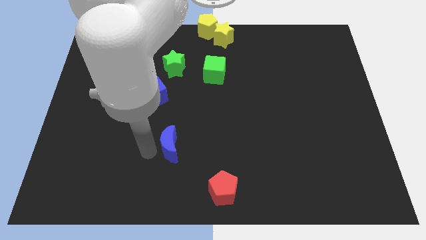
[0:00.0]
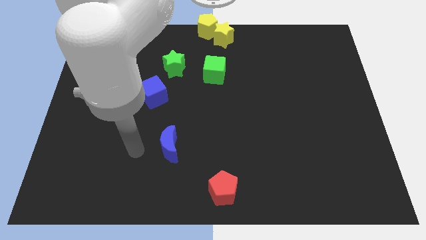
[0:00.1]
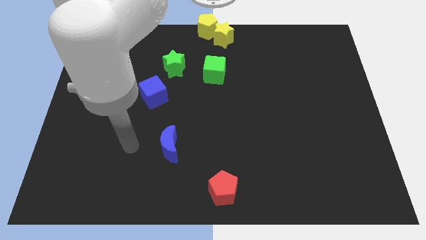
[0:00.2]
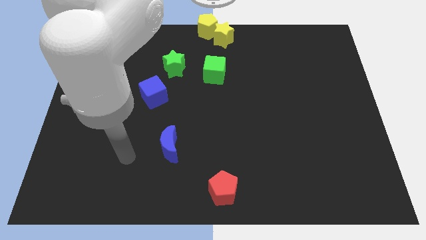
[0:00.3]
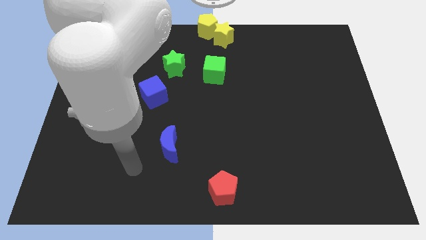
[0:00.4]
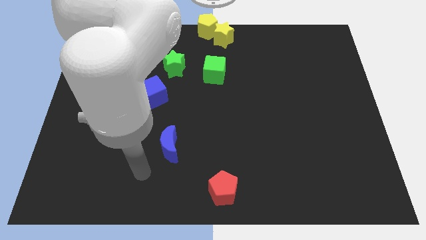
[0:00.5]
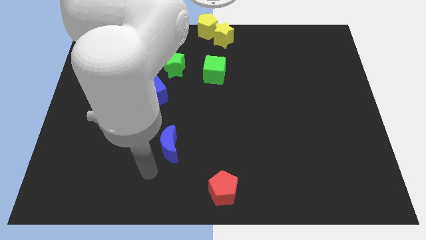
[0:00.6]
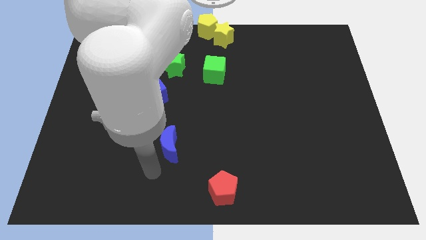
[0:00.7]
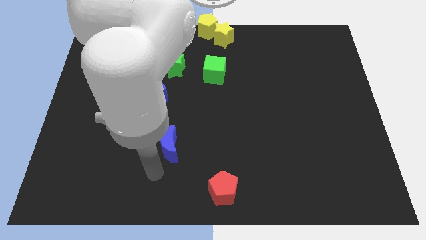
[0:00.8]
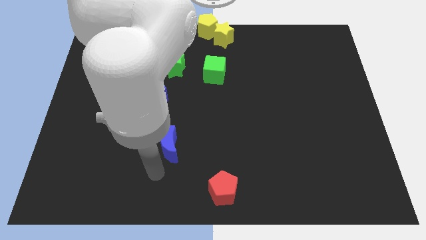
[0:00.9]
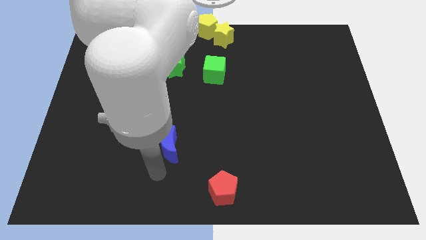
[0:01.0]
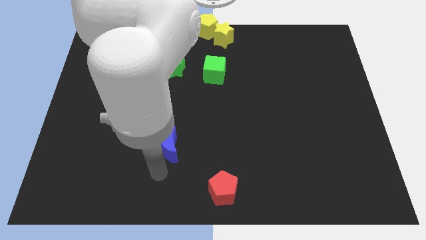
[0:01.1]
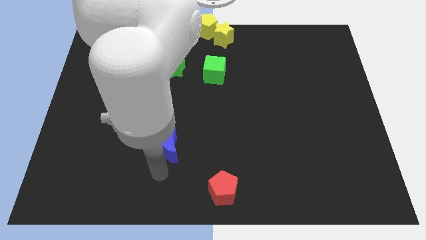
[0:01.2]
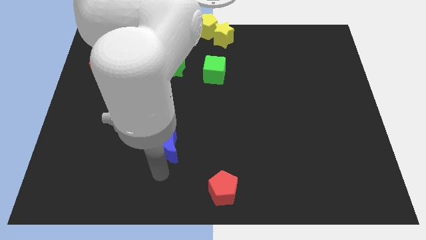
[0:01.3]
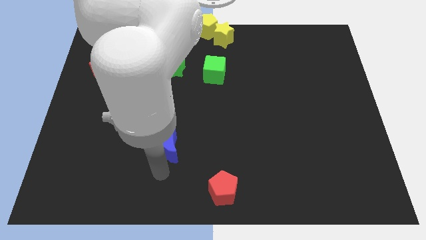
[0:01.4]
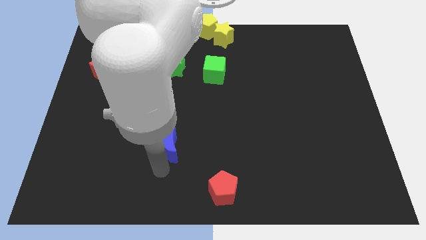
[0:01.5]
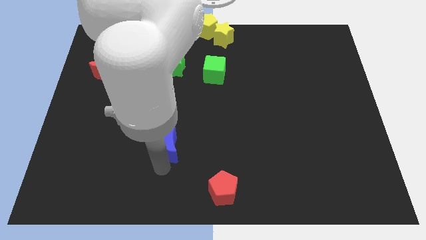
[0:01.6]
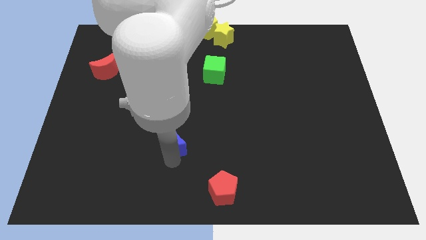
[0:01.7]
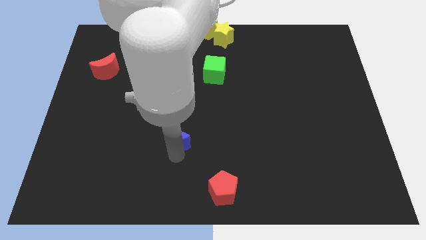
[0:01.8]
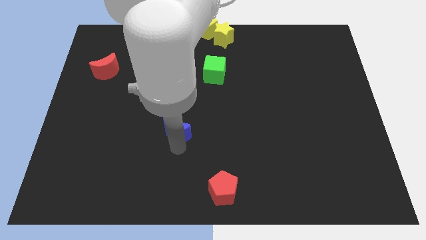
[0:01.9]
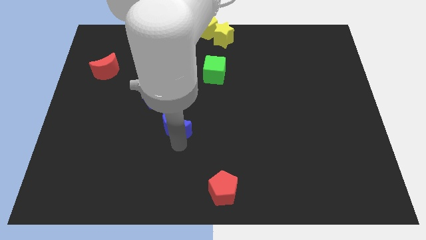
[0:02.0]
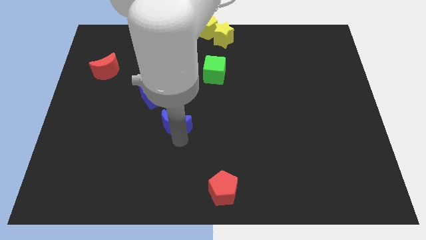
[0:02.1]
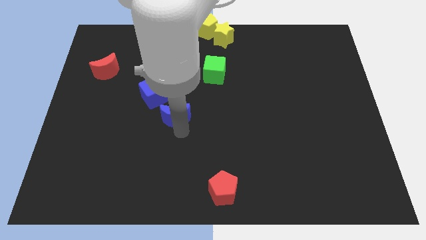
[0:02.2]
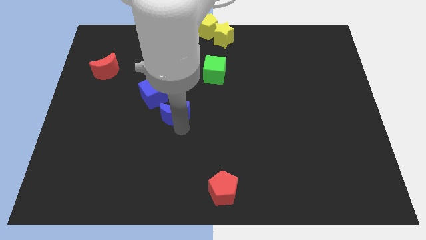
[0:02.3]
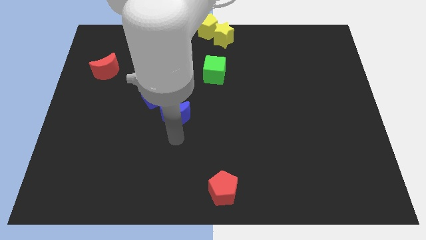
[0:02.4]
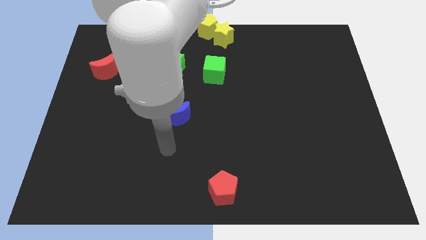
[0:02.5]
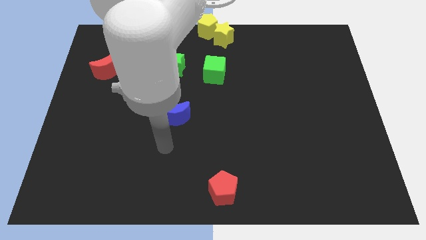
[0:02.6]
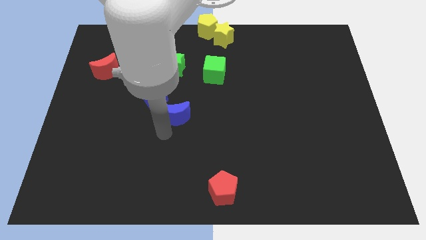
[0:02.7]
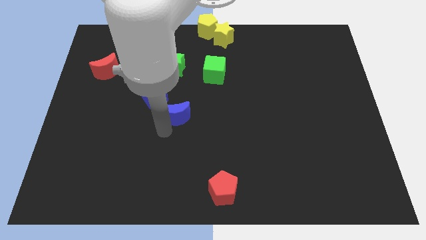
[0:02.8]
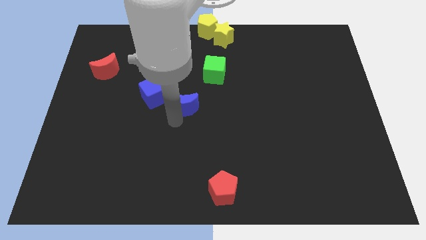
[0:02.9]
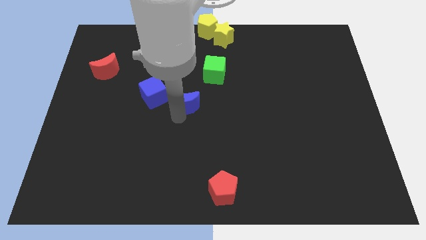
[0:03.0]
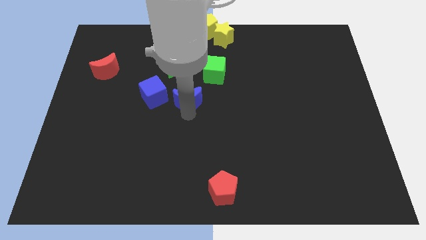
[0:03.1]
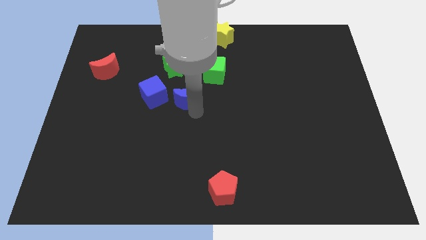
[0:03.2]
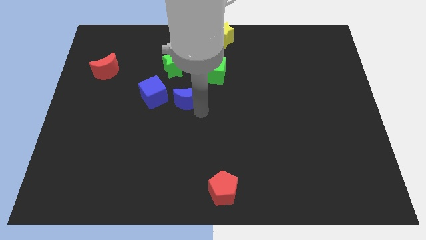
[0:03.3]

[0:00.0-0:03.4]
place the blue crescent right to the blue cube

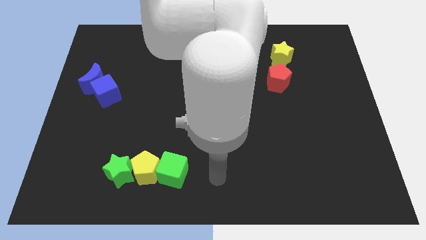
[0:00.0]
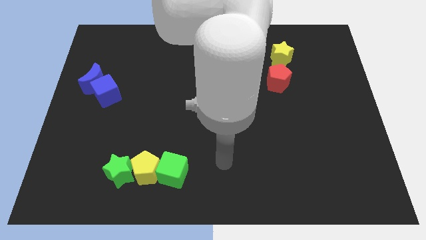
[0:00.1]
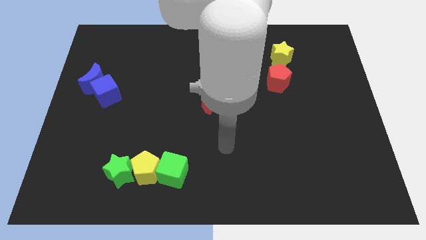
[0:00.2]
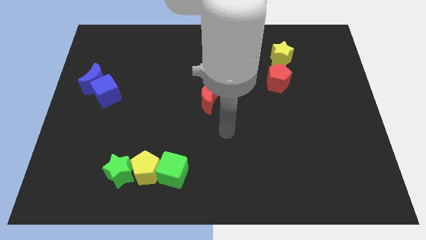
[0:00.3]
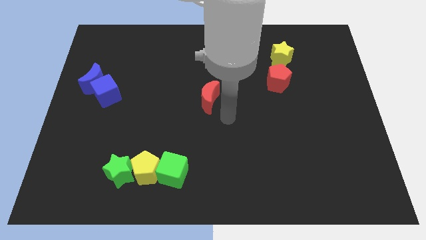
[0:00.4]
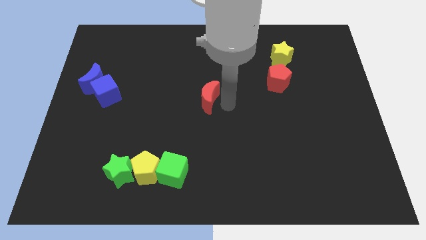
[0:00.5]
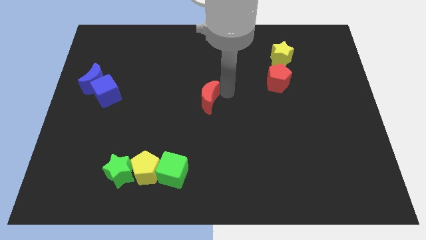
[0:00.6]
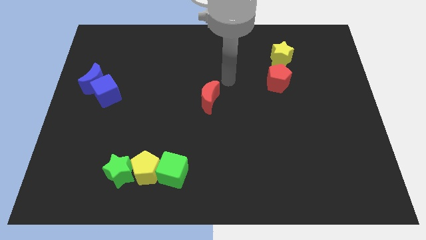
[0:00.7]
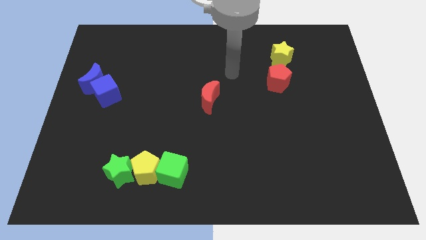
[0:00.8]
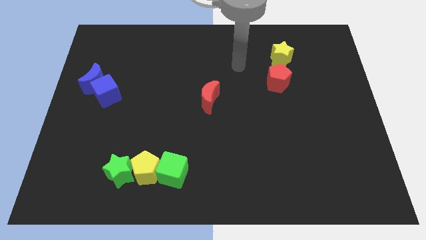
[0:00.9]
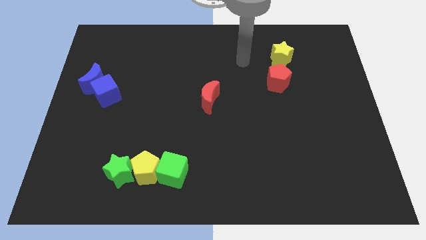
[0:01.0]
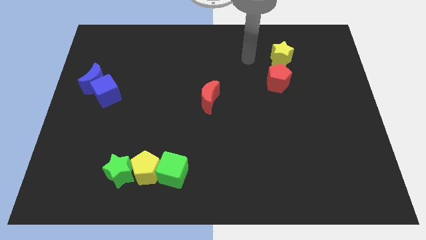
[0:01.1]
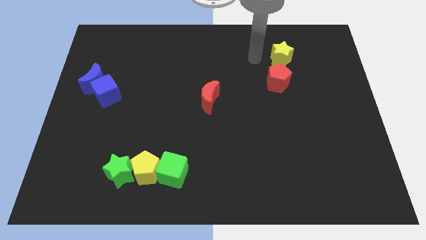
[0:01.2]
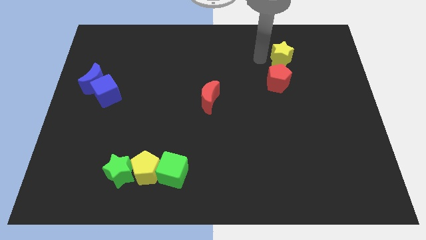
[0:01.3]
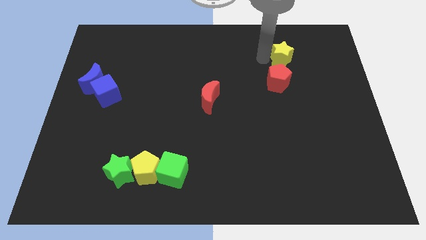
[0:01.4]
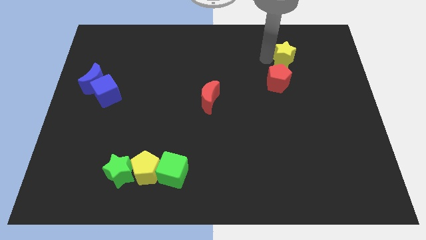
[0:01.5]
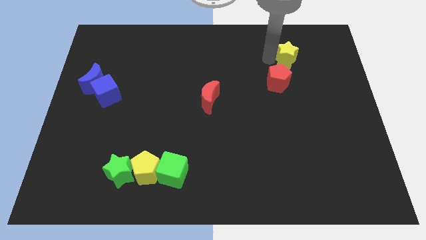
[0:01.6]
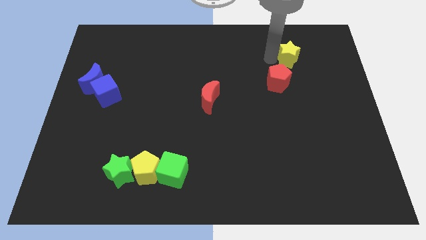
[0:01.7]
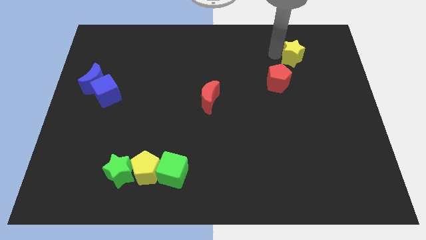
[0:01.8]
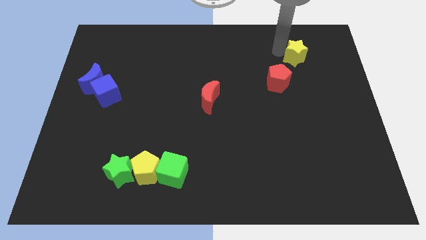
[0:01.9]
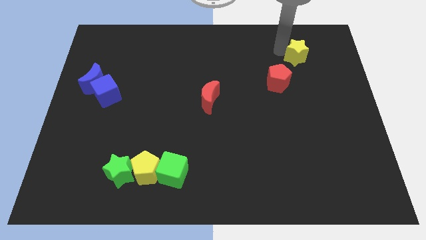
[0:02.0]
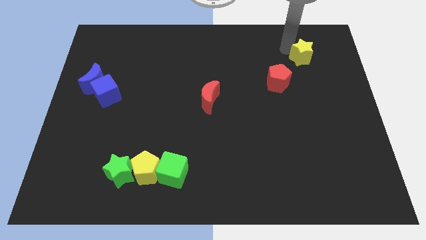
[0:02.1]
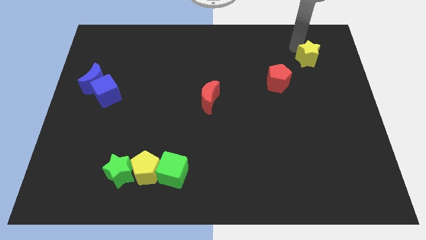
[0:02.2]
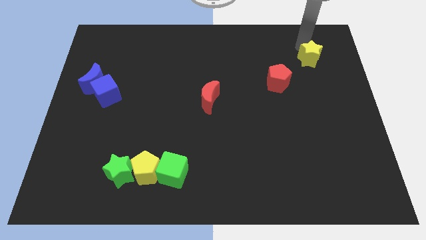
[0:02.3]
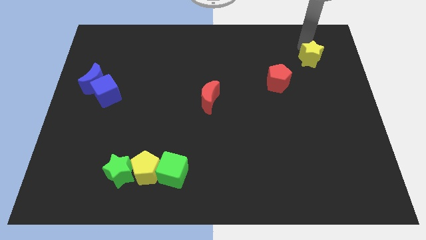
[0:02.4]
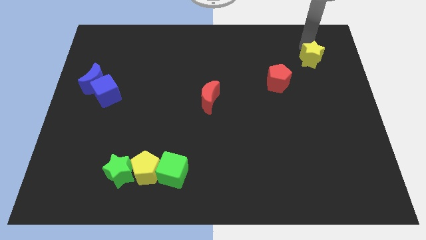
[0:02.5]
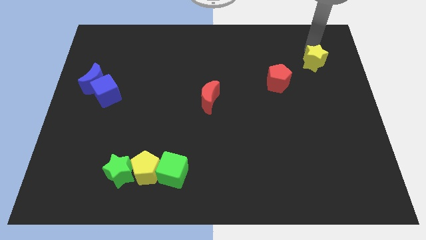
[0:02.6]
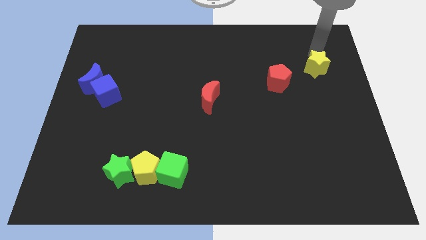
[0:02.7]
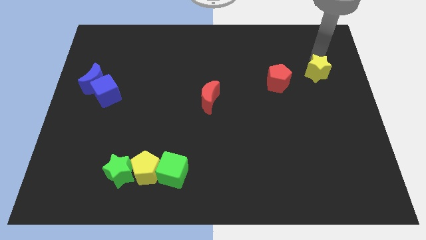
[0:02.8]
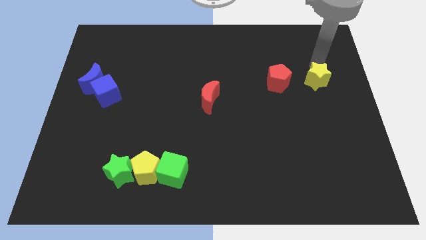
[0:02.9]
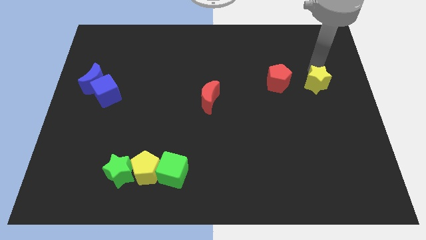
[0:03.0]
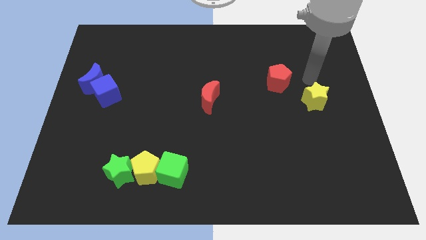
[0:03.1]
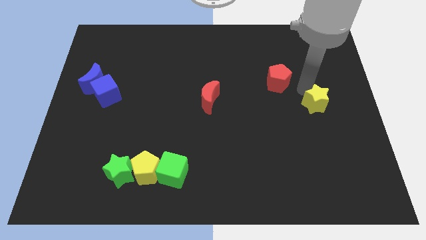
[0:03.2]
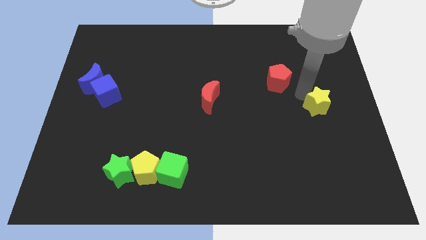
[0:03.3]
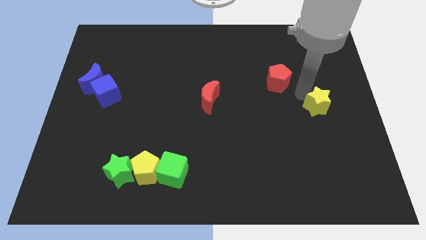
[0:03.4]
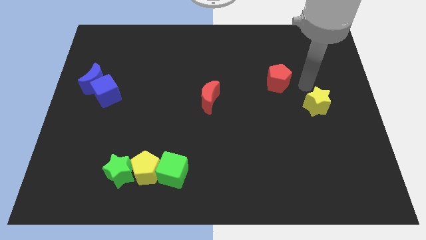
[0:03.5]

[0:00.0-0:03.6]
move the yellow star at the bottom right side of the red pentagon

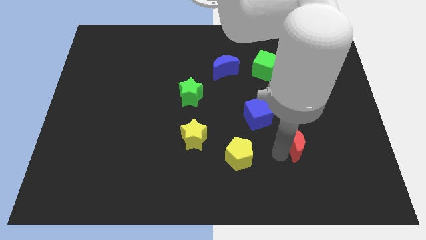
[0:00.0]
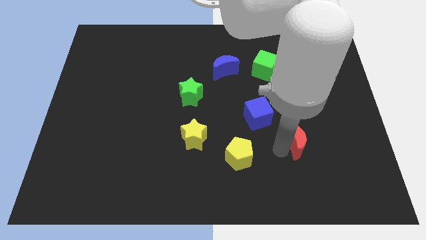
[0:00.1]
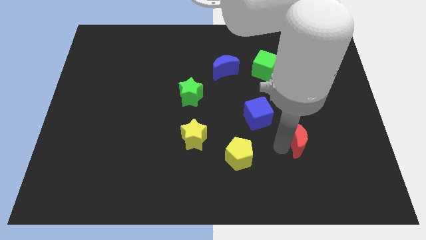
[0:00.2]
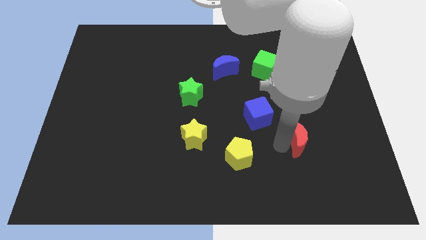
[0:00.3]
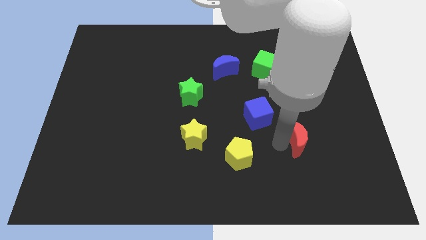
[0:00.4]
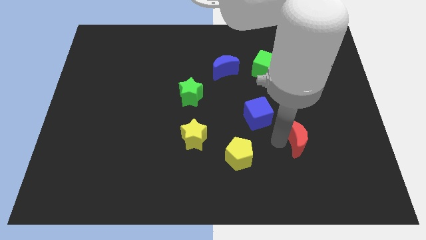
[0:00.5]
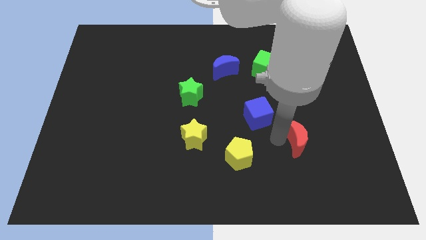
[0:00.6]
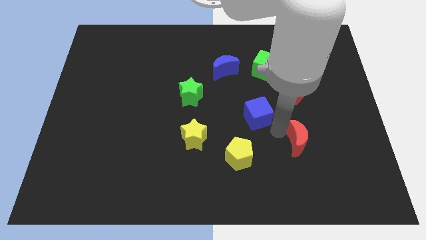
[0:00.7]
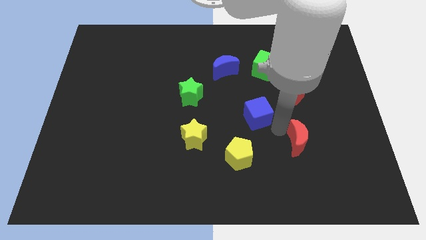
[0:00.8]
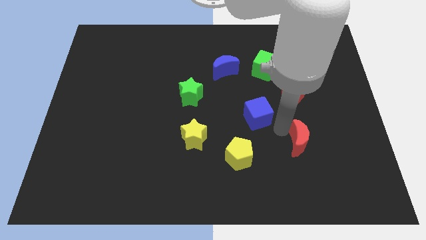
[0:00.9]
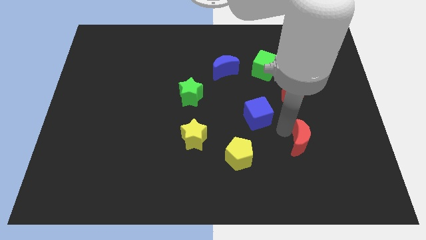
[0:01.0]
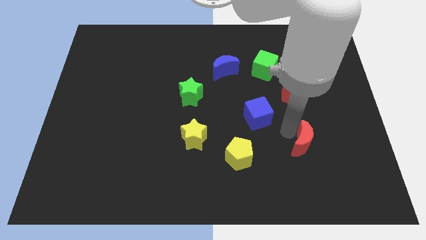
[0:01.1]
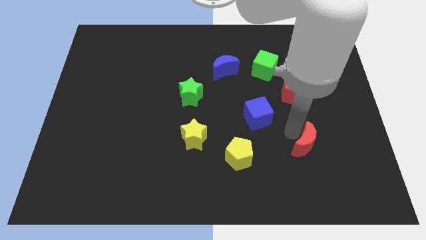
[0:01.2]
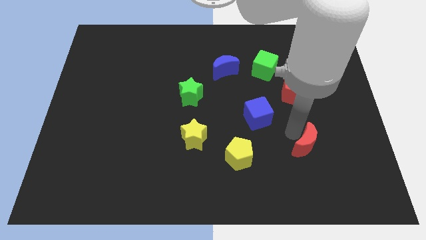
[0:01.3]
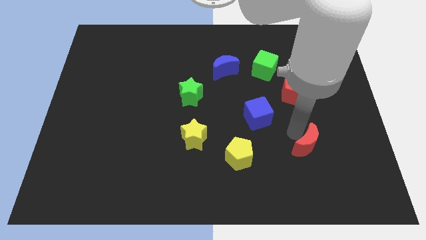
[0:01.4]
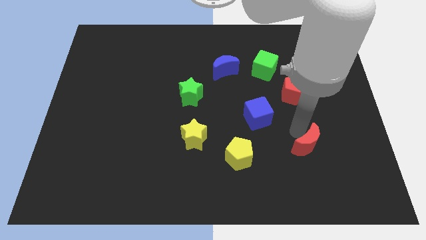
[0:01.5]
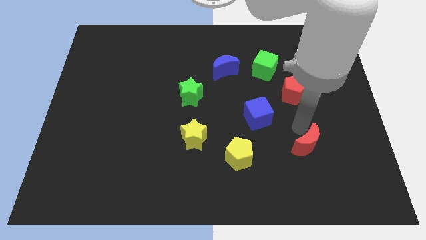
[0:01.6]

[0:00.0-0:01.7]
move the red crescent diagnol to the blue cube at the bottom right

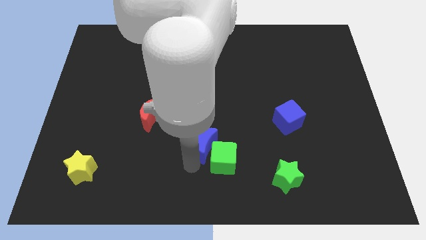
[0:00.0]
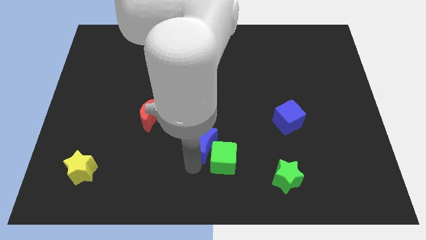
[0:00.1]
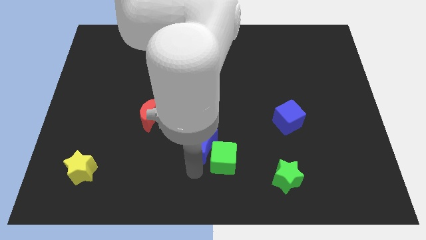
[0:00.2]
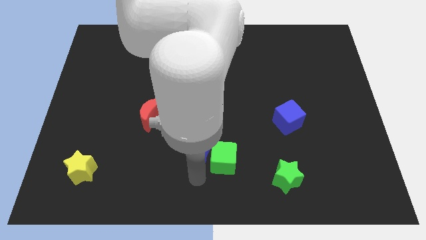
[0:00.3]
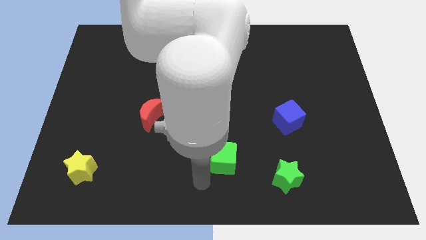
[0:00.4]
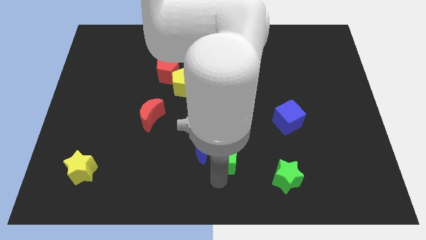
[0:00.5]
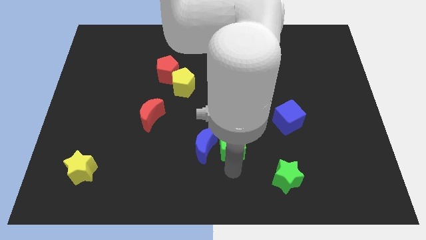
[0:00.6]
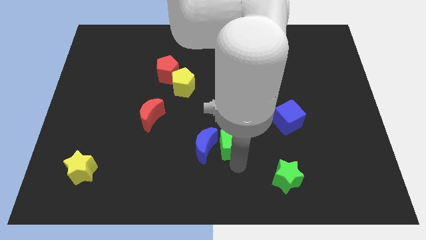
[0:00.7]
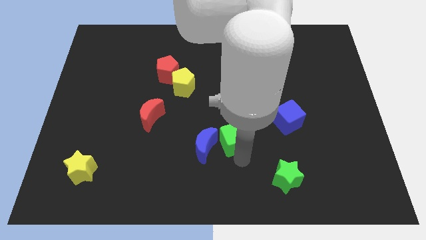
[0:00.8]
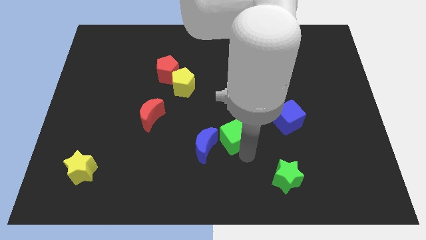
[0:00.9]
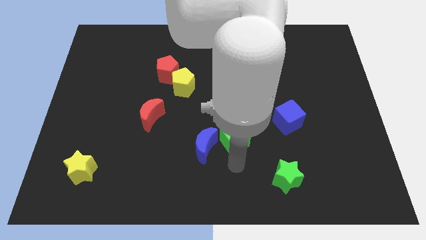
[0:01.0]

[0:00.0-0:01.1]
put the green cube in between the blue blocks
